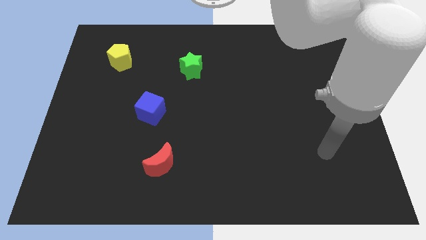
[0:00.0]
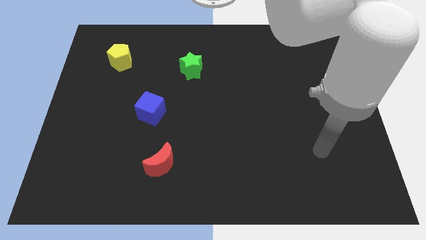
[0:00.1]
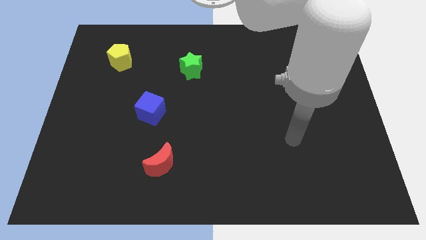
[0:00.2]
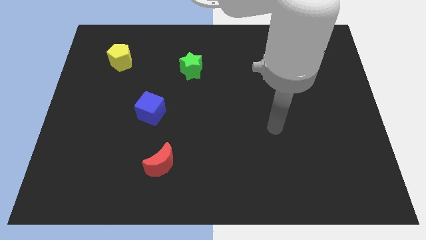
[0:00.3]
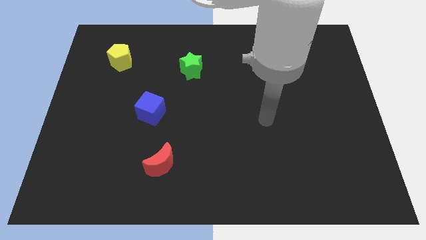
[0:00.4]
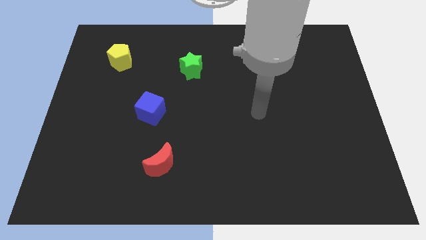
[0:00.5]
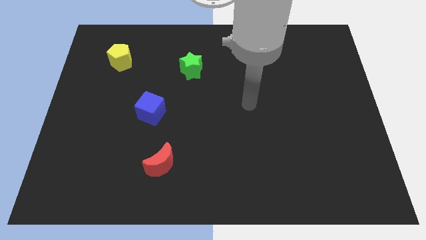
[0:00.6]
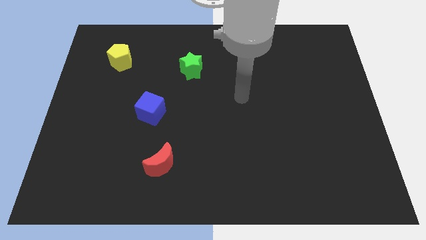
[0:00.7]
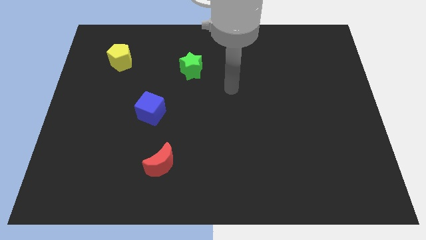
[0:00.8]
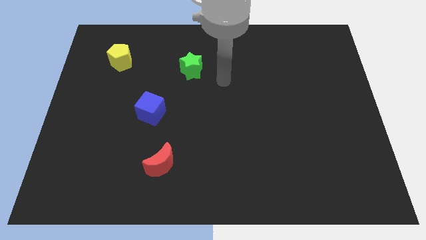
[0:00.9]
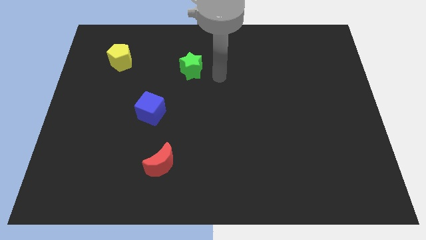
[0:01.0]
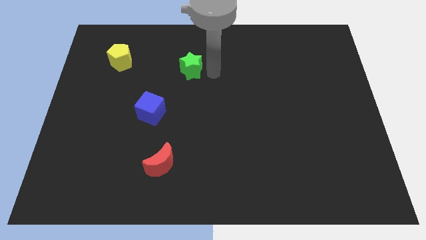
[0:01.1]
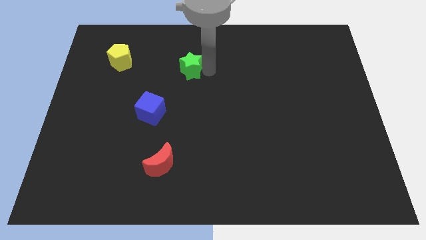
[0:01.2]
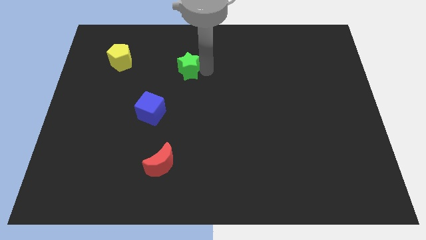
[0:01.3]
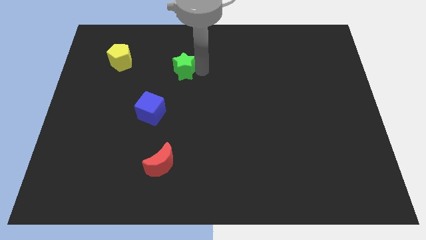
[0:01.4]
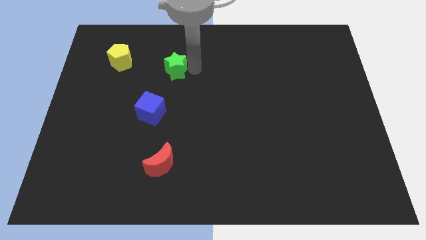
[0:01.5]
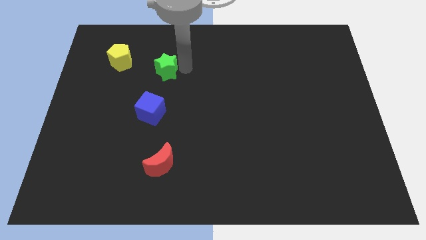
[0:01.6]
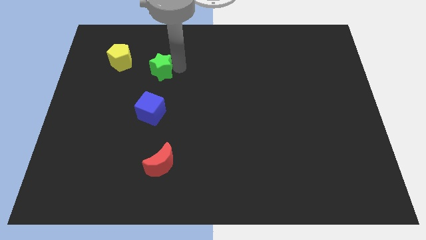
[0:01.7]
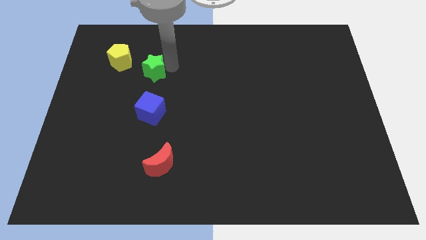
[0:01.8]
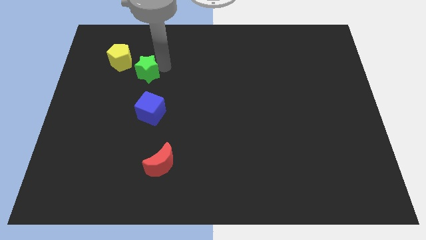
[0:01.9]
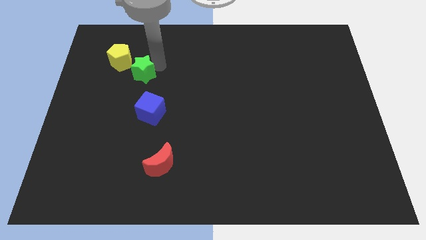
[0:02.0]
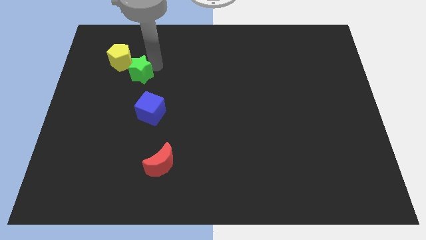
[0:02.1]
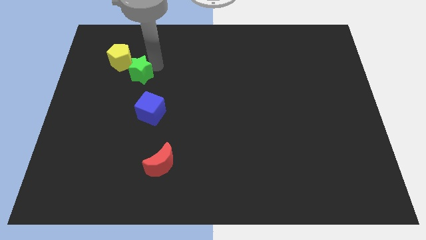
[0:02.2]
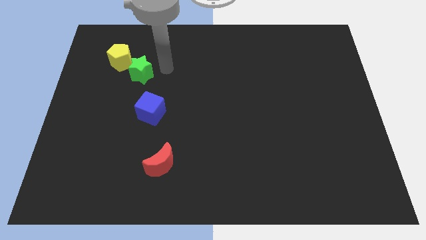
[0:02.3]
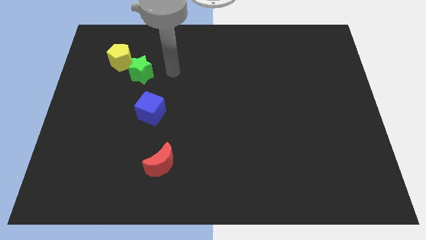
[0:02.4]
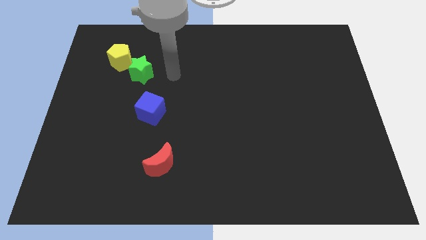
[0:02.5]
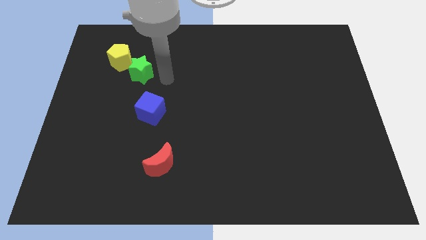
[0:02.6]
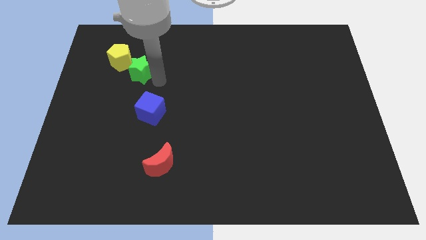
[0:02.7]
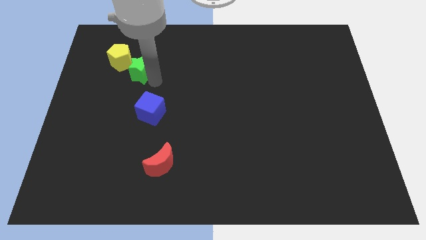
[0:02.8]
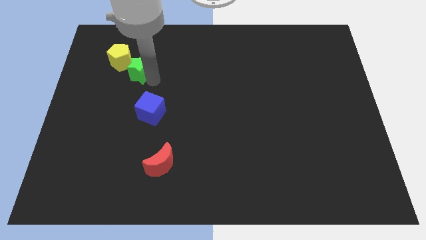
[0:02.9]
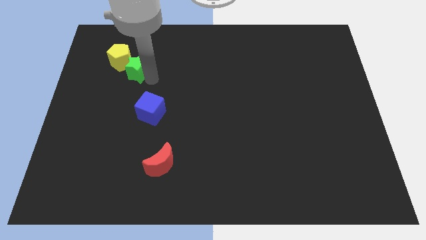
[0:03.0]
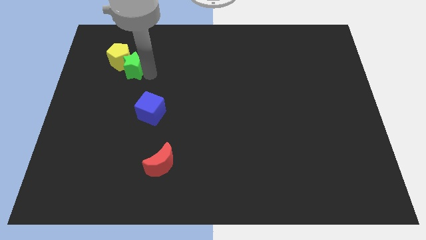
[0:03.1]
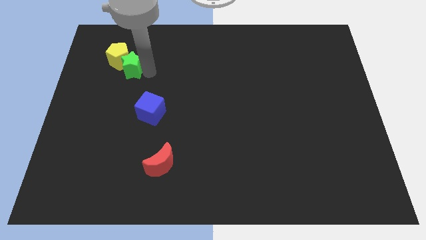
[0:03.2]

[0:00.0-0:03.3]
move the green block towards the pentagon

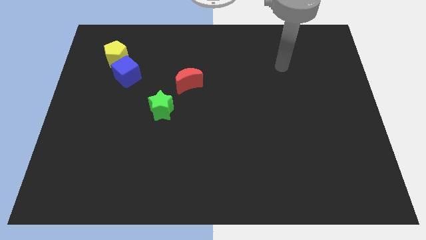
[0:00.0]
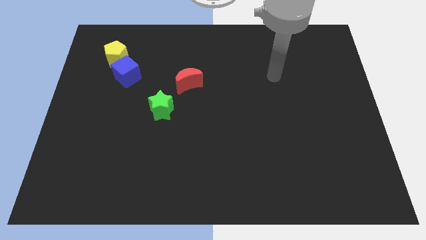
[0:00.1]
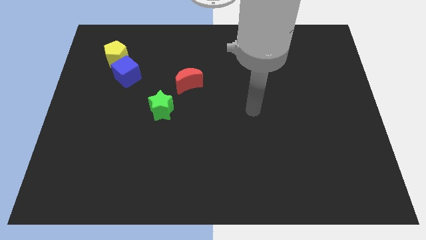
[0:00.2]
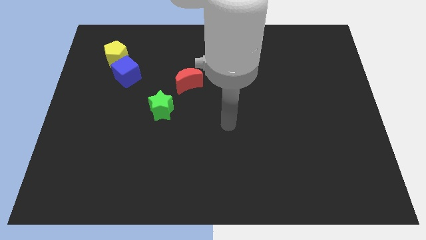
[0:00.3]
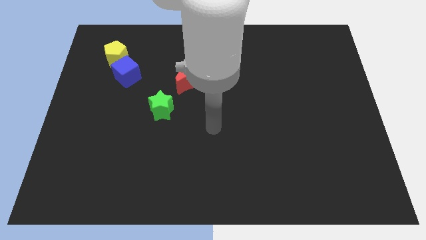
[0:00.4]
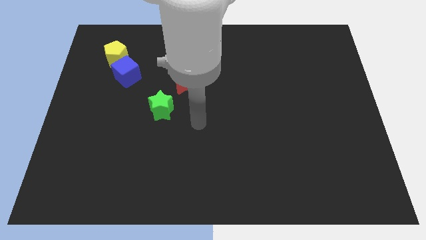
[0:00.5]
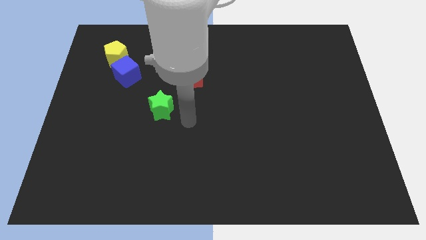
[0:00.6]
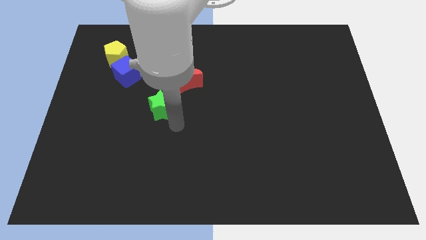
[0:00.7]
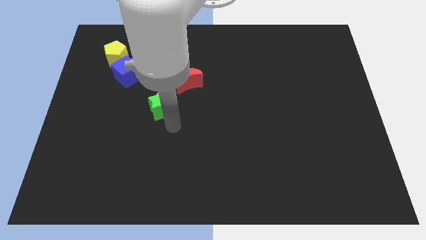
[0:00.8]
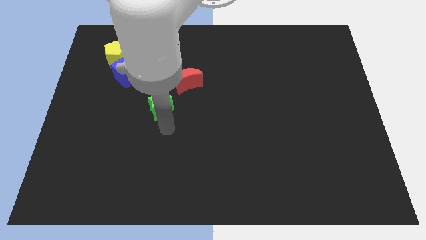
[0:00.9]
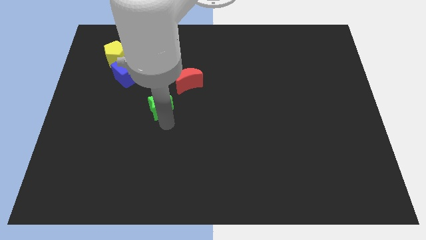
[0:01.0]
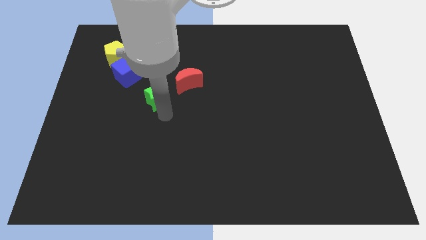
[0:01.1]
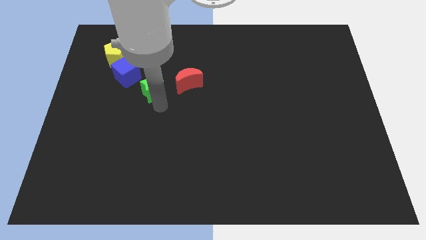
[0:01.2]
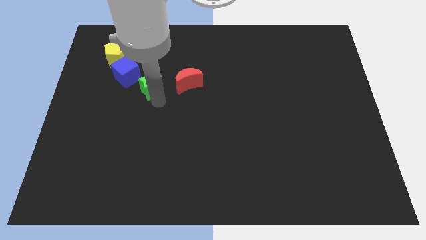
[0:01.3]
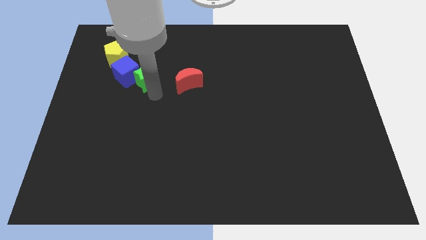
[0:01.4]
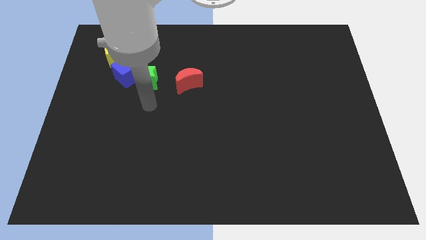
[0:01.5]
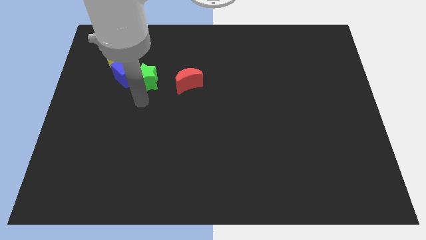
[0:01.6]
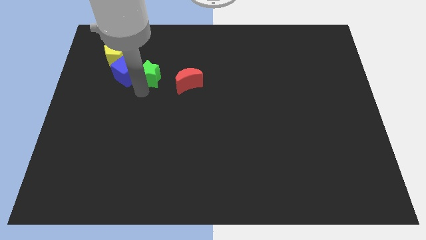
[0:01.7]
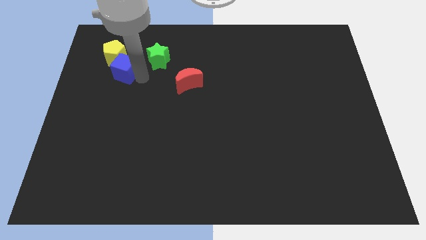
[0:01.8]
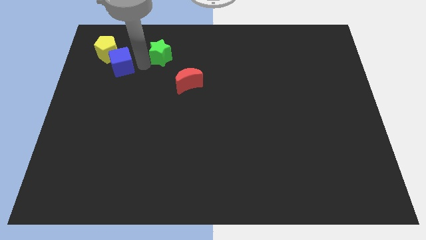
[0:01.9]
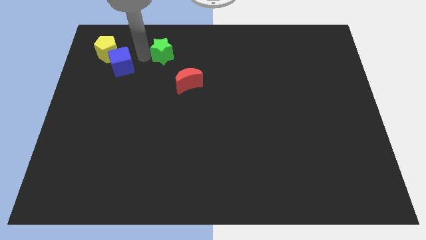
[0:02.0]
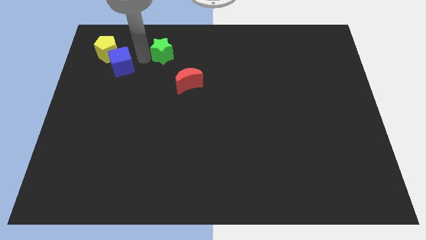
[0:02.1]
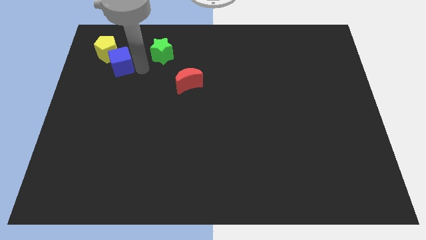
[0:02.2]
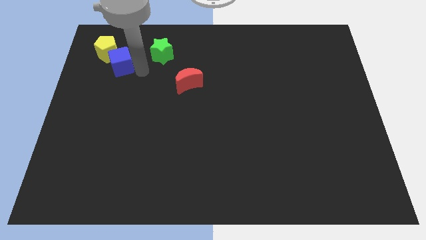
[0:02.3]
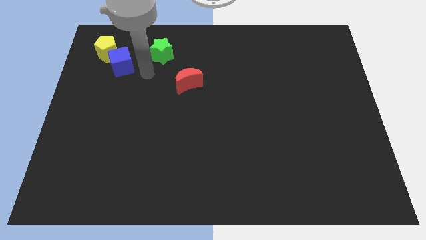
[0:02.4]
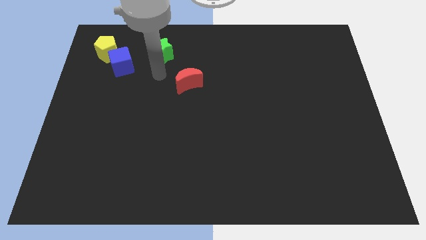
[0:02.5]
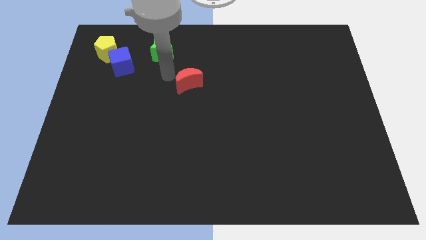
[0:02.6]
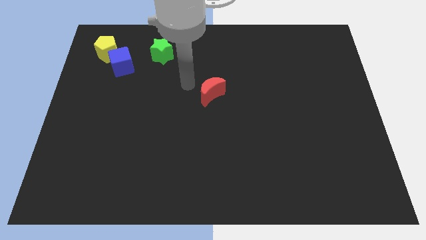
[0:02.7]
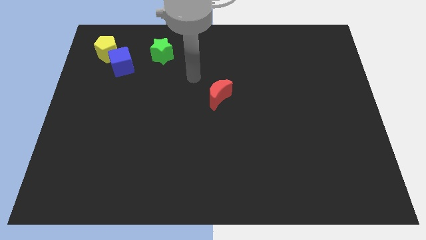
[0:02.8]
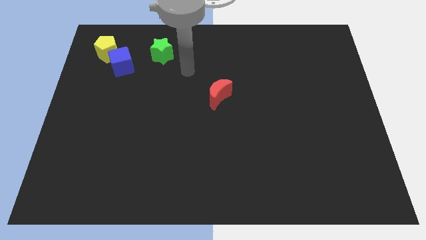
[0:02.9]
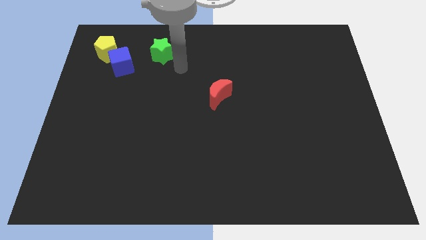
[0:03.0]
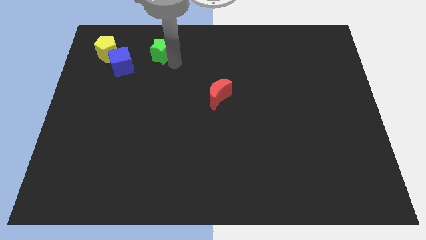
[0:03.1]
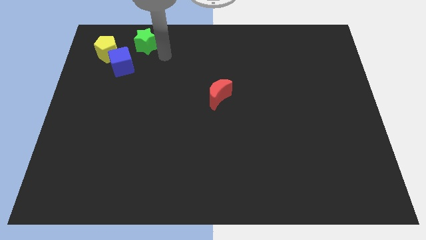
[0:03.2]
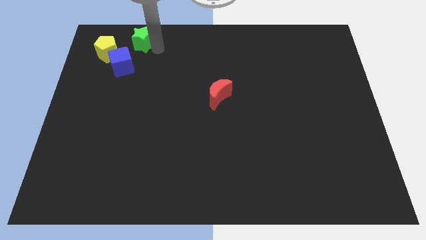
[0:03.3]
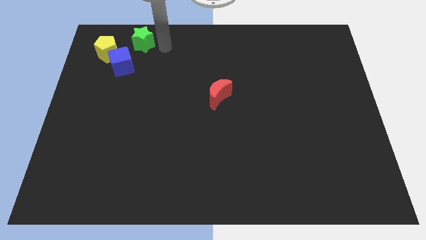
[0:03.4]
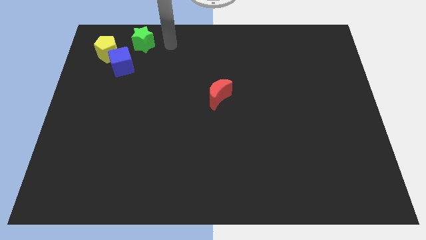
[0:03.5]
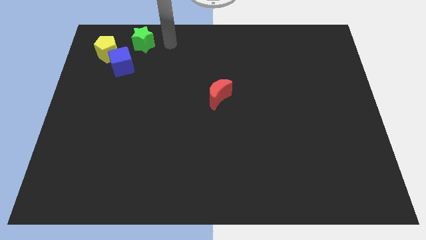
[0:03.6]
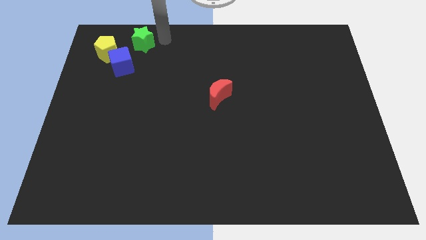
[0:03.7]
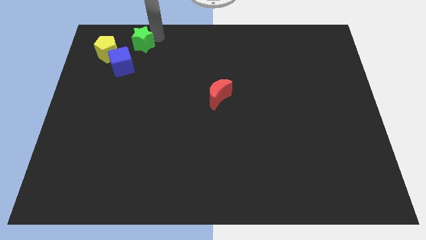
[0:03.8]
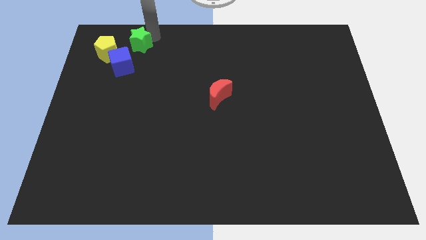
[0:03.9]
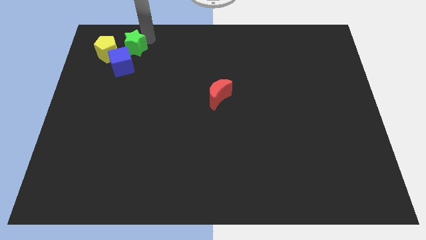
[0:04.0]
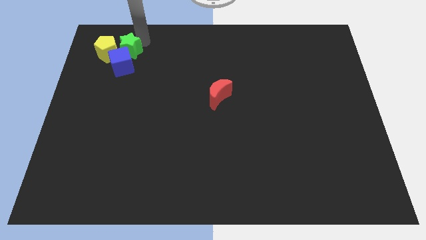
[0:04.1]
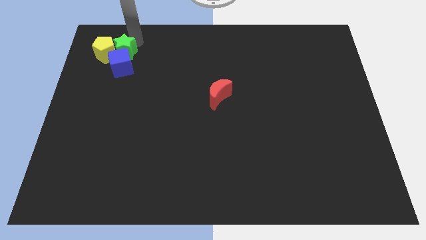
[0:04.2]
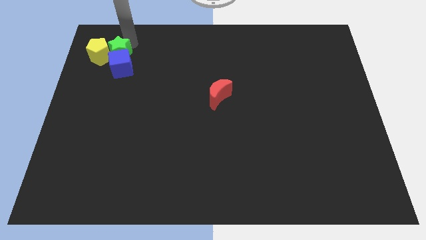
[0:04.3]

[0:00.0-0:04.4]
push the green star towards the yellow block

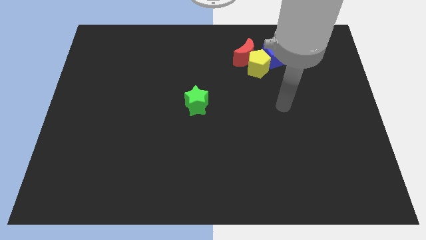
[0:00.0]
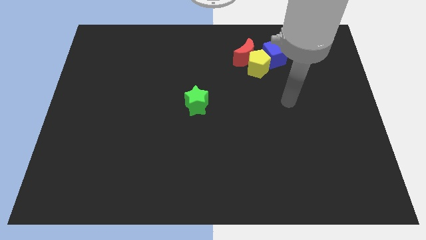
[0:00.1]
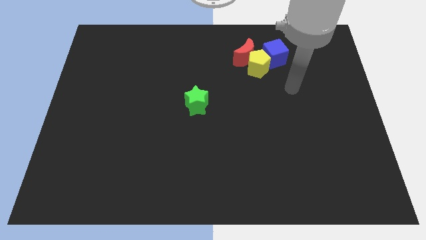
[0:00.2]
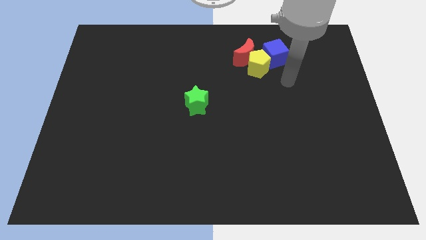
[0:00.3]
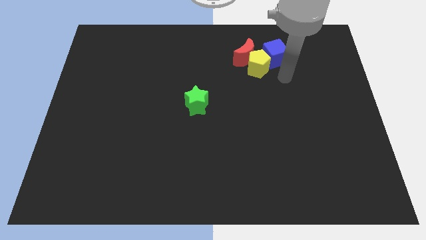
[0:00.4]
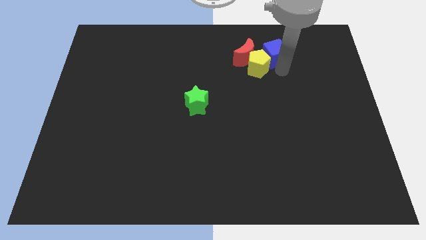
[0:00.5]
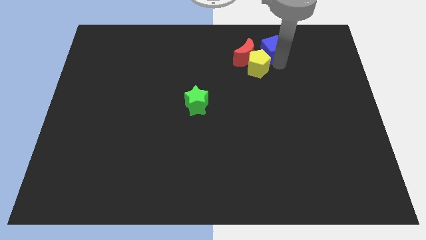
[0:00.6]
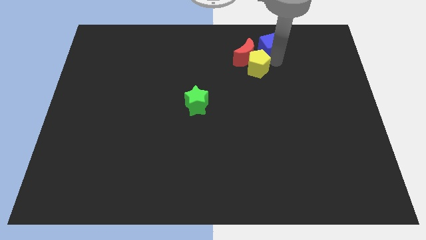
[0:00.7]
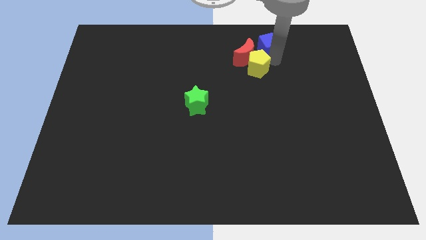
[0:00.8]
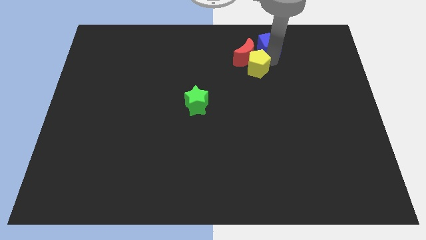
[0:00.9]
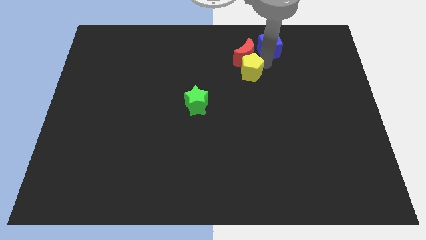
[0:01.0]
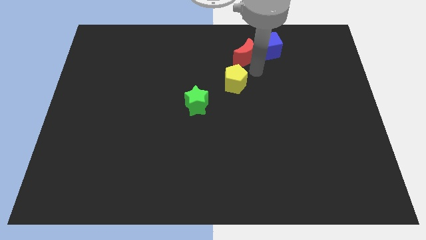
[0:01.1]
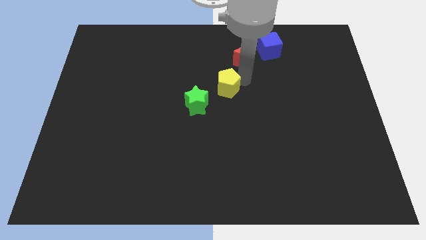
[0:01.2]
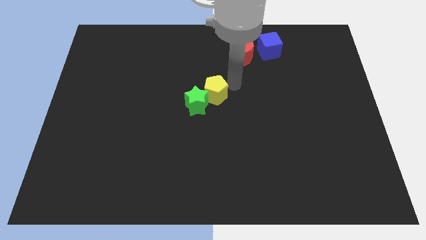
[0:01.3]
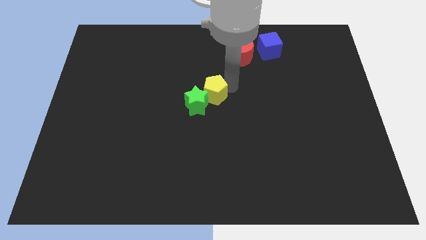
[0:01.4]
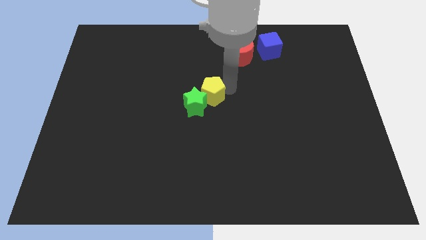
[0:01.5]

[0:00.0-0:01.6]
push the pentagon close to the star
